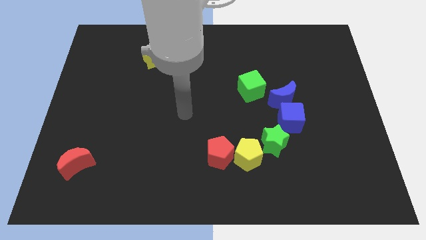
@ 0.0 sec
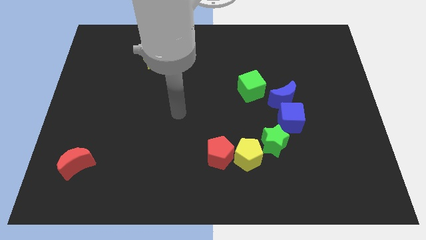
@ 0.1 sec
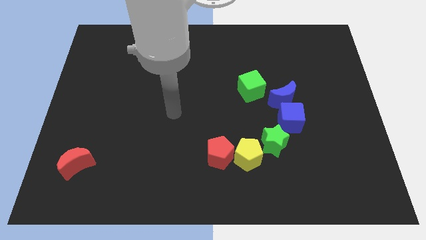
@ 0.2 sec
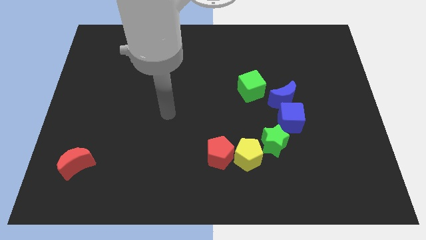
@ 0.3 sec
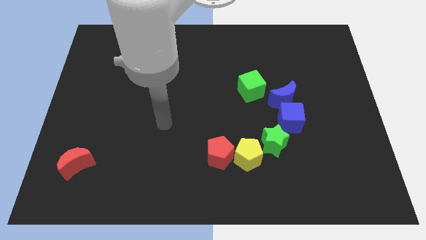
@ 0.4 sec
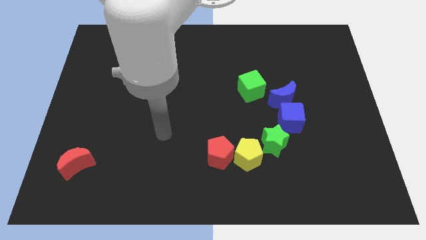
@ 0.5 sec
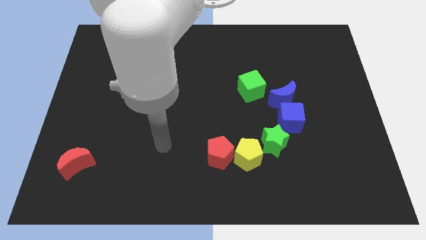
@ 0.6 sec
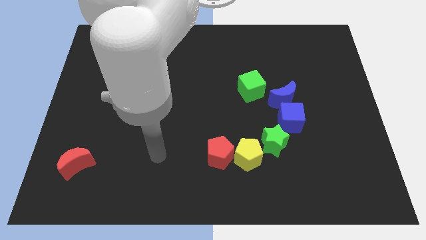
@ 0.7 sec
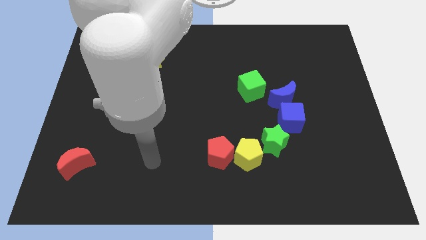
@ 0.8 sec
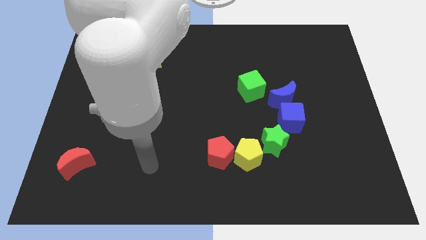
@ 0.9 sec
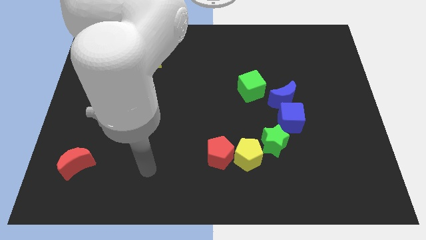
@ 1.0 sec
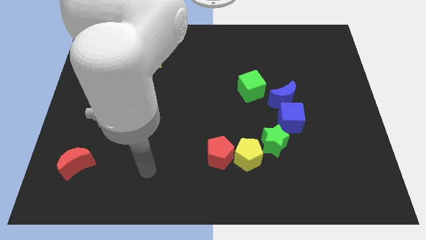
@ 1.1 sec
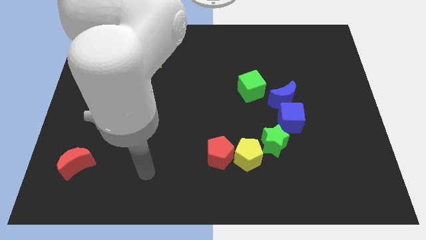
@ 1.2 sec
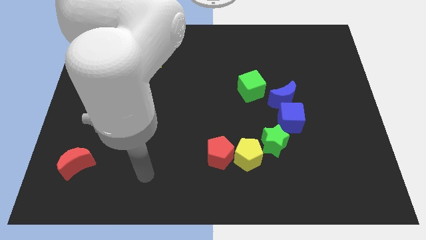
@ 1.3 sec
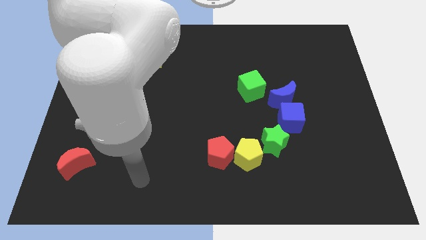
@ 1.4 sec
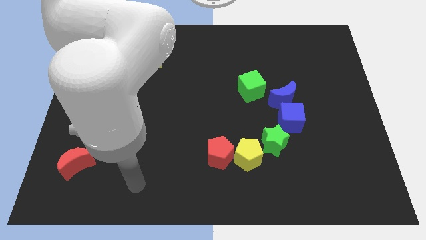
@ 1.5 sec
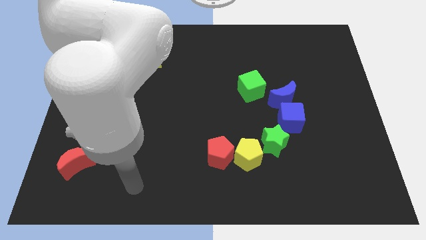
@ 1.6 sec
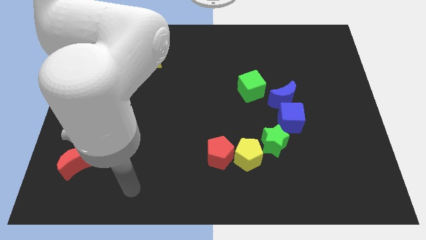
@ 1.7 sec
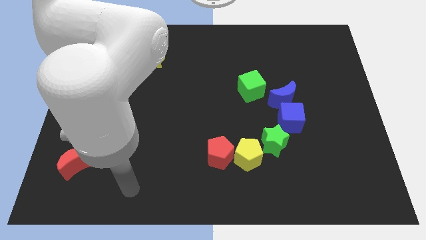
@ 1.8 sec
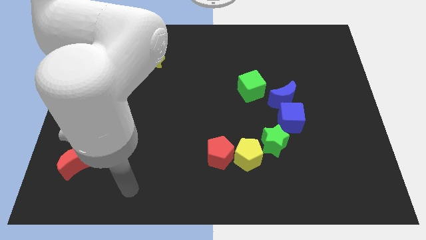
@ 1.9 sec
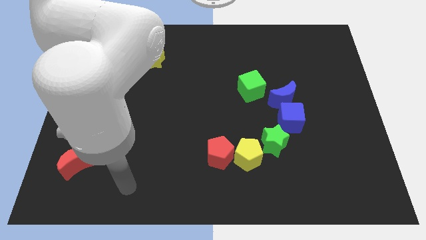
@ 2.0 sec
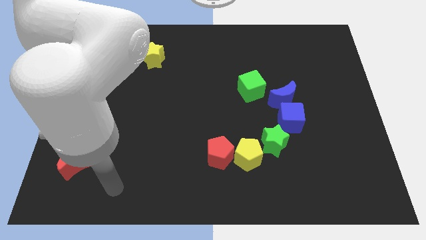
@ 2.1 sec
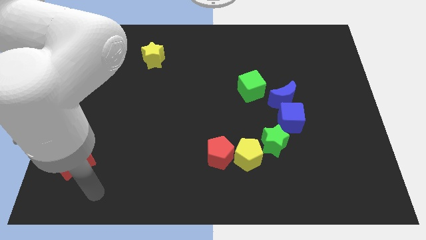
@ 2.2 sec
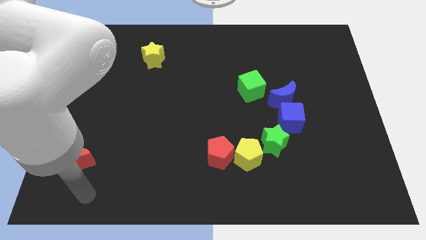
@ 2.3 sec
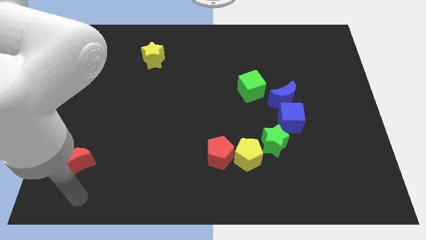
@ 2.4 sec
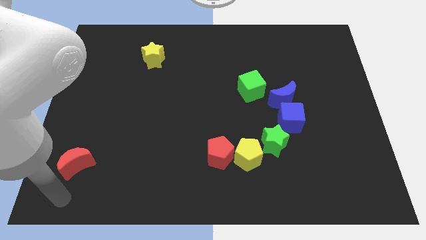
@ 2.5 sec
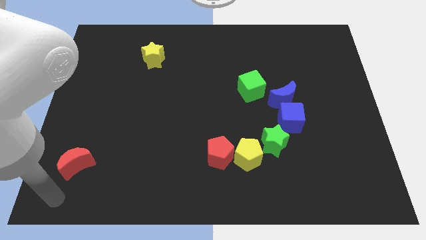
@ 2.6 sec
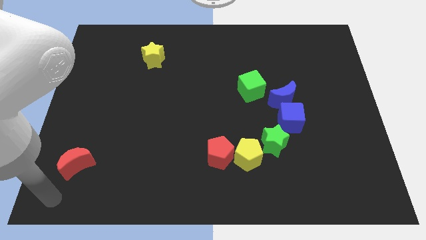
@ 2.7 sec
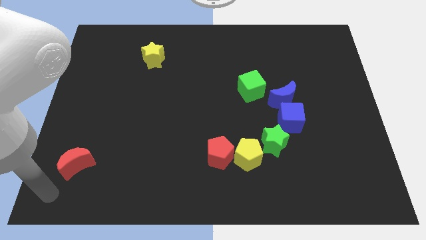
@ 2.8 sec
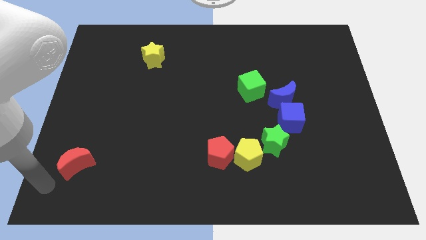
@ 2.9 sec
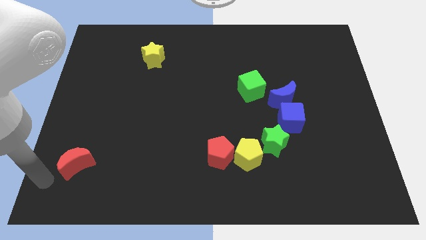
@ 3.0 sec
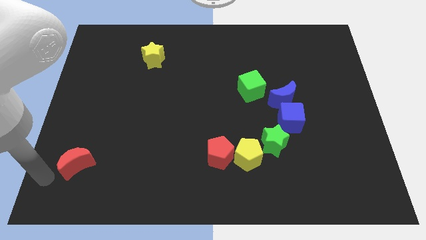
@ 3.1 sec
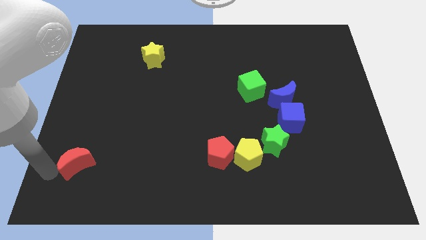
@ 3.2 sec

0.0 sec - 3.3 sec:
move your arm to the left of the red crescent

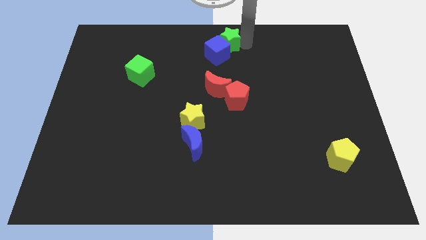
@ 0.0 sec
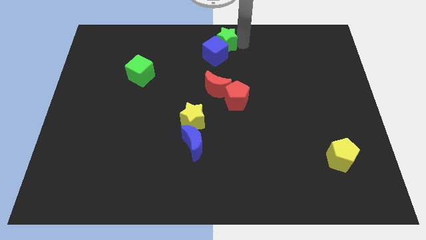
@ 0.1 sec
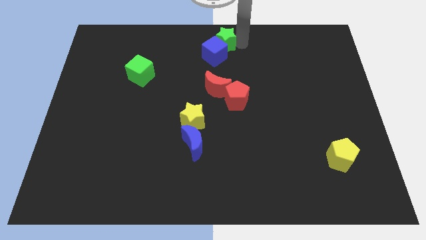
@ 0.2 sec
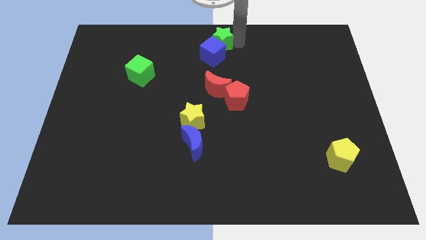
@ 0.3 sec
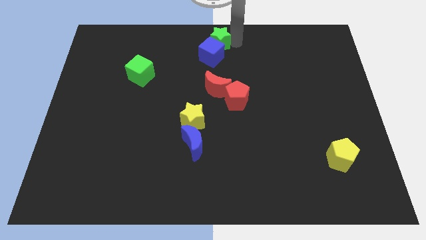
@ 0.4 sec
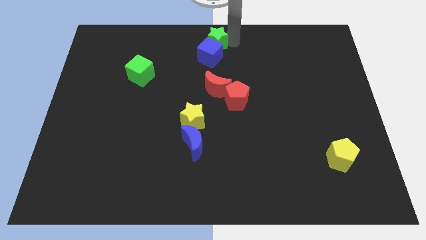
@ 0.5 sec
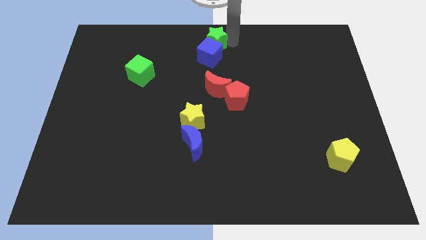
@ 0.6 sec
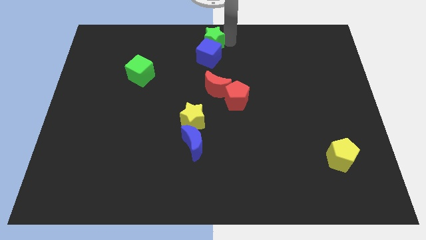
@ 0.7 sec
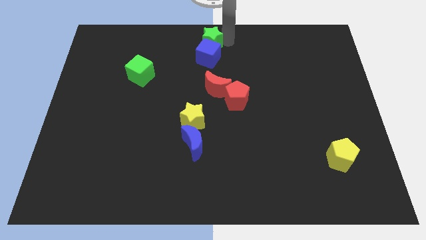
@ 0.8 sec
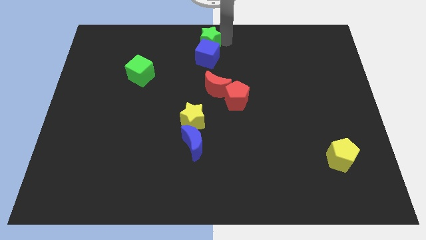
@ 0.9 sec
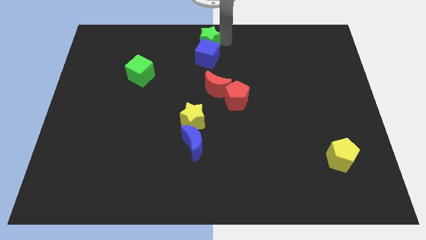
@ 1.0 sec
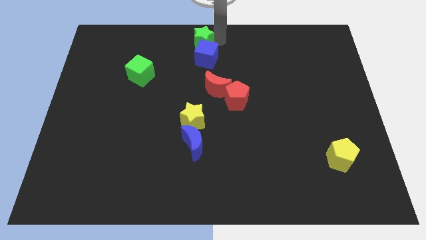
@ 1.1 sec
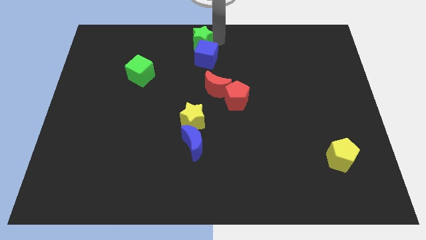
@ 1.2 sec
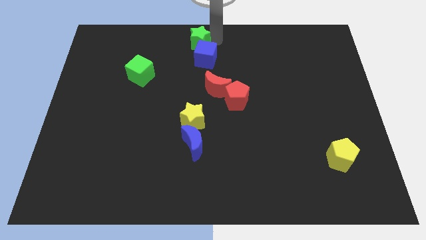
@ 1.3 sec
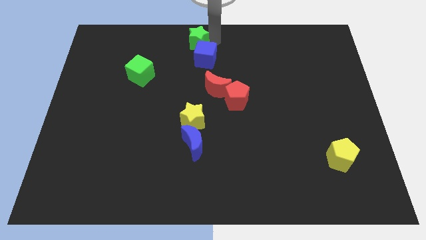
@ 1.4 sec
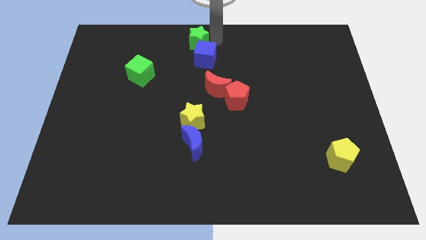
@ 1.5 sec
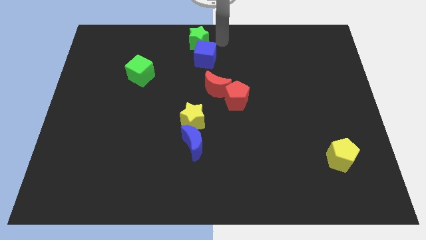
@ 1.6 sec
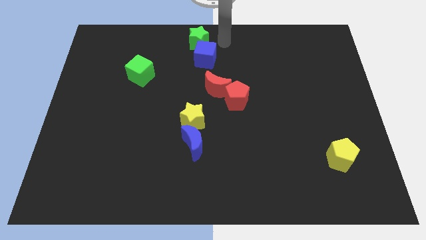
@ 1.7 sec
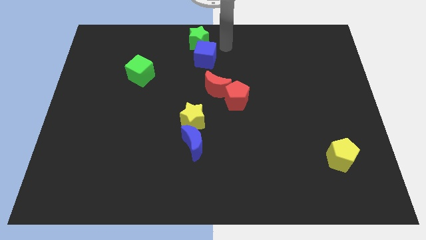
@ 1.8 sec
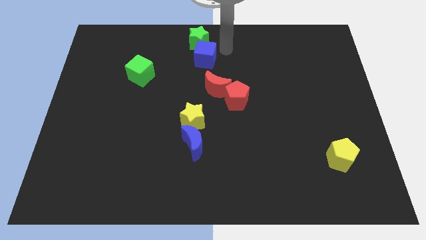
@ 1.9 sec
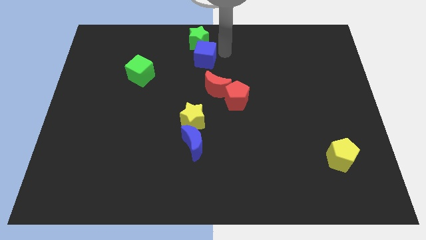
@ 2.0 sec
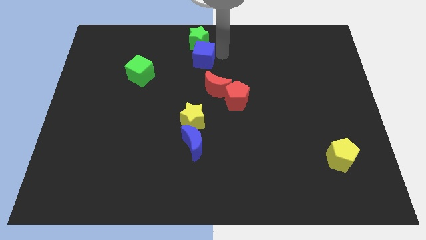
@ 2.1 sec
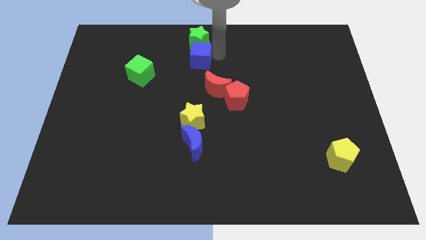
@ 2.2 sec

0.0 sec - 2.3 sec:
move the green star below to the blue cube

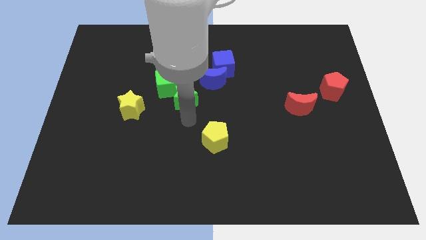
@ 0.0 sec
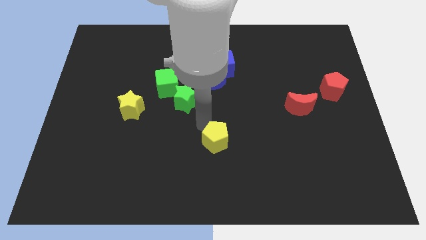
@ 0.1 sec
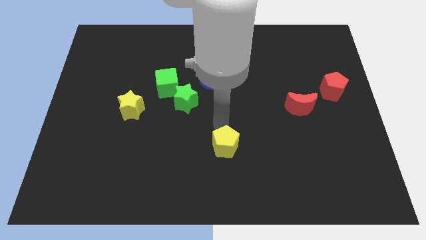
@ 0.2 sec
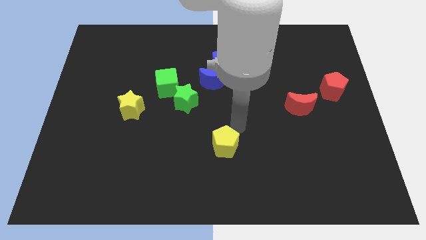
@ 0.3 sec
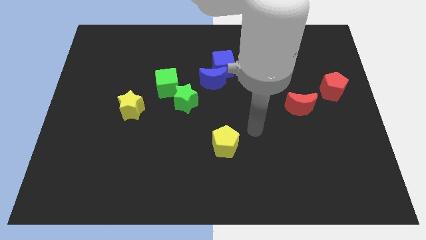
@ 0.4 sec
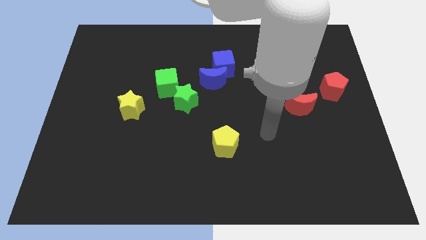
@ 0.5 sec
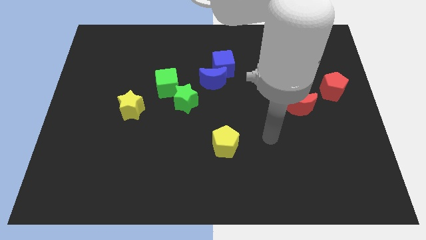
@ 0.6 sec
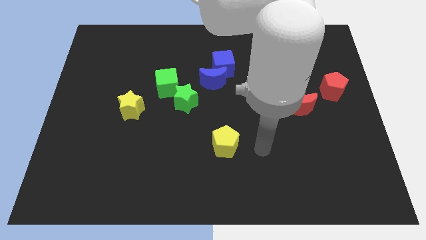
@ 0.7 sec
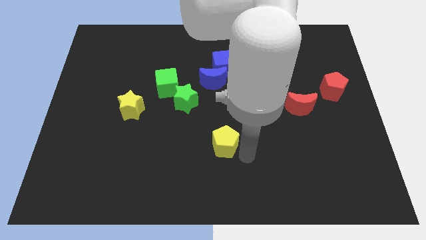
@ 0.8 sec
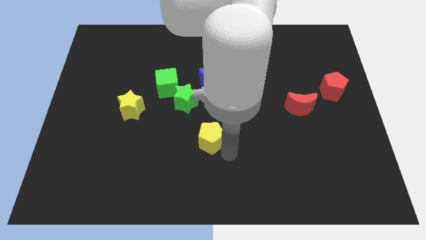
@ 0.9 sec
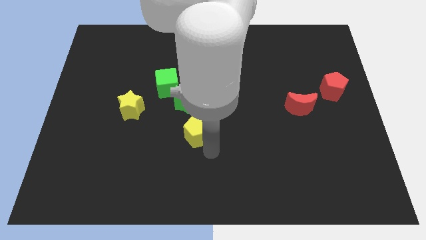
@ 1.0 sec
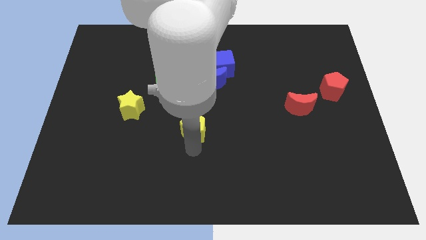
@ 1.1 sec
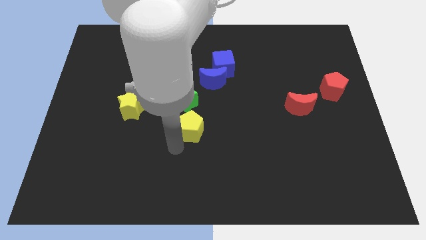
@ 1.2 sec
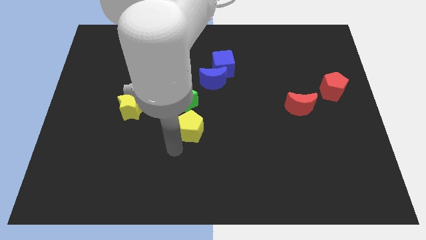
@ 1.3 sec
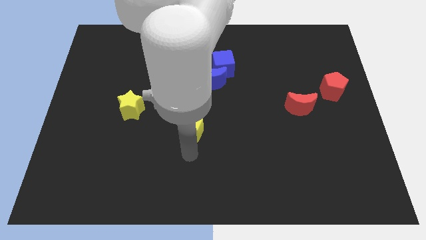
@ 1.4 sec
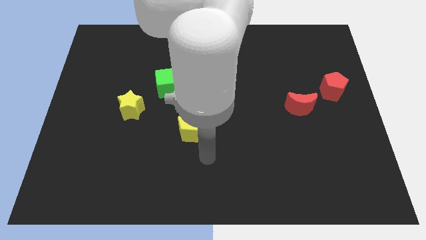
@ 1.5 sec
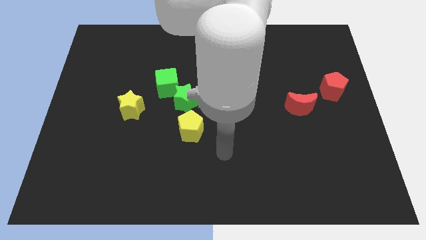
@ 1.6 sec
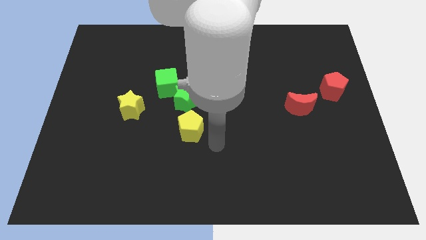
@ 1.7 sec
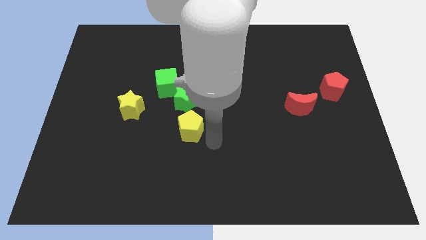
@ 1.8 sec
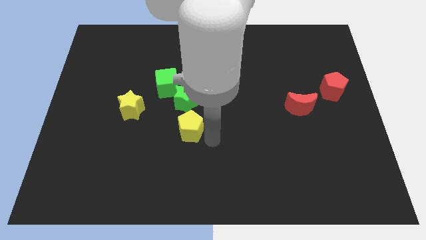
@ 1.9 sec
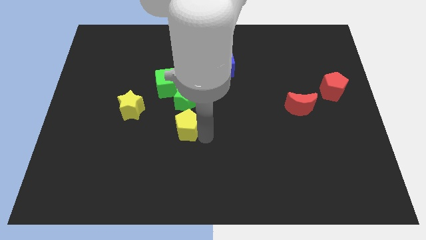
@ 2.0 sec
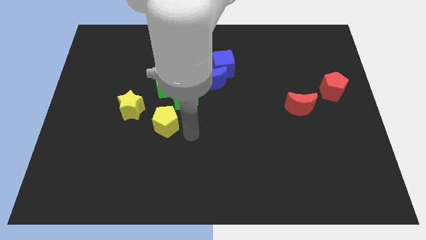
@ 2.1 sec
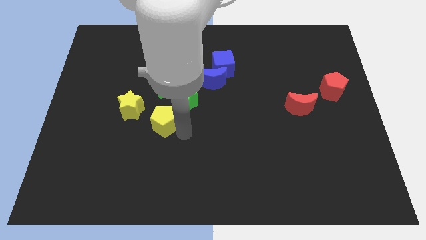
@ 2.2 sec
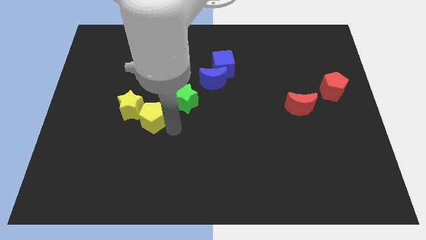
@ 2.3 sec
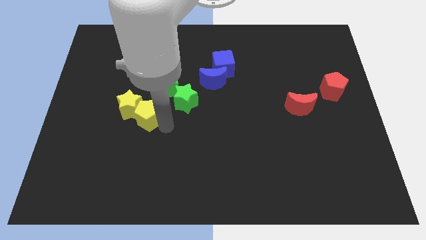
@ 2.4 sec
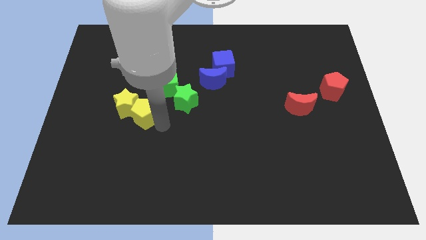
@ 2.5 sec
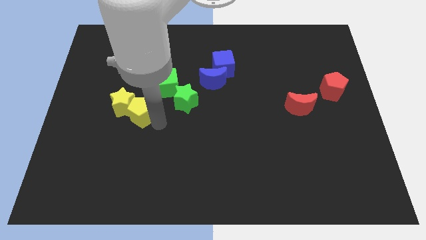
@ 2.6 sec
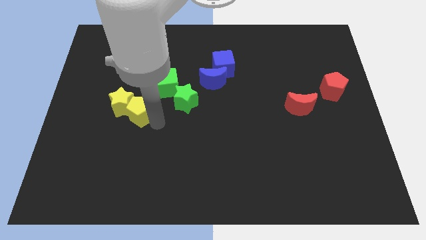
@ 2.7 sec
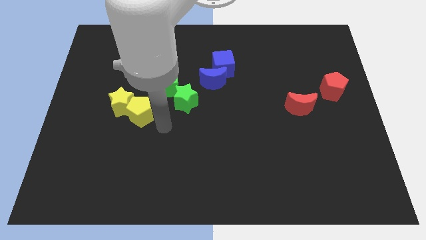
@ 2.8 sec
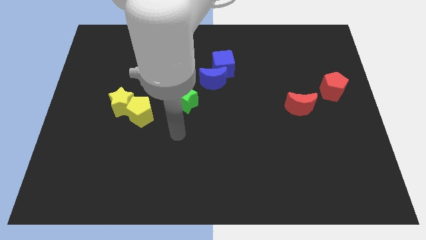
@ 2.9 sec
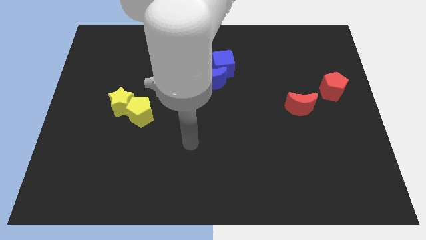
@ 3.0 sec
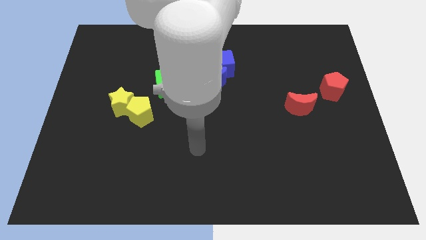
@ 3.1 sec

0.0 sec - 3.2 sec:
drag the yellow pentagon into the yellow star

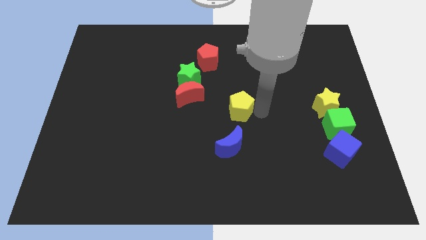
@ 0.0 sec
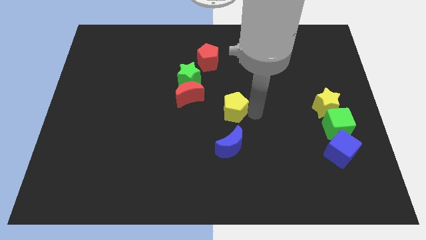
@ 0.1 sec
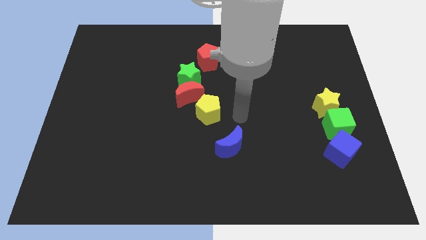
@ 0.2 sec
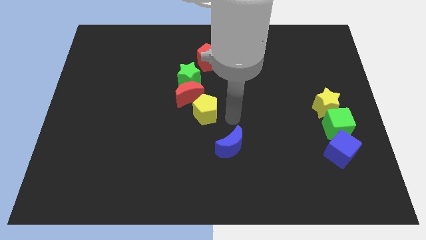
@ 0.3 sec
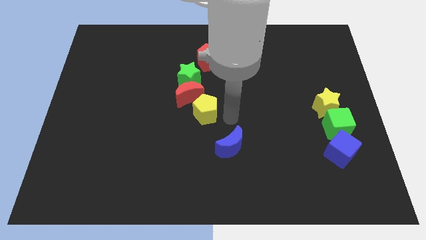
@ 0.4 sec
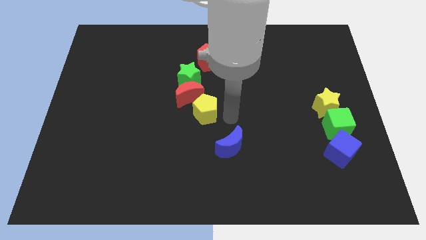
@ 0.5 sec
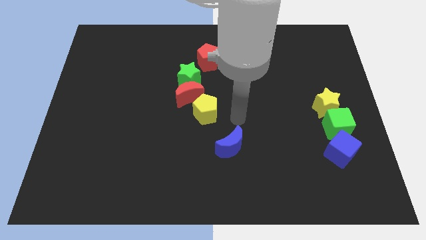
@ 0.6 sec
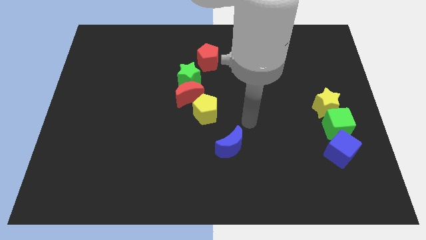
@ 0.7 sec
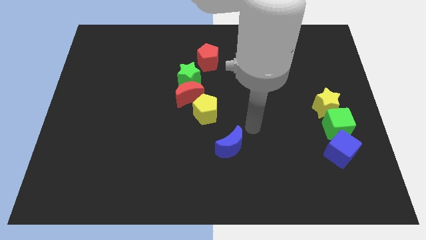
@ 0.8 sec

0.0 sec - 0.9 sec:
move the yellow pentagon below the red crescent
